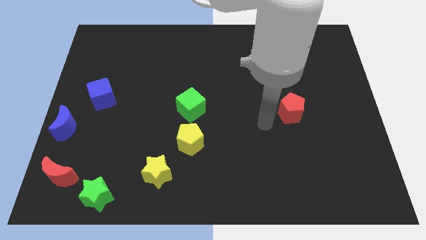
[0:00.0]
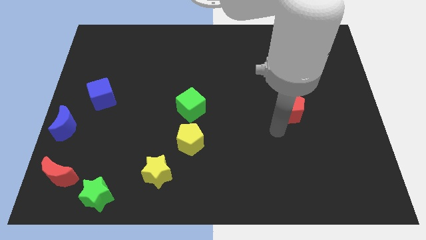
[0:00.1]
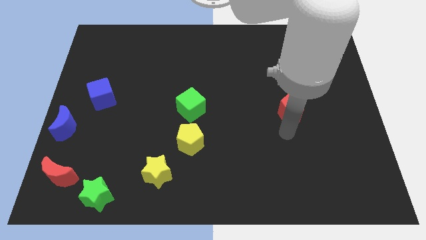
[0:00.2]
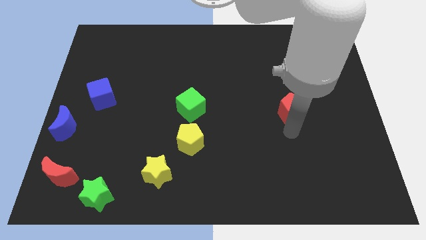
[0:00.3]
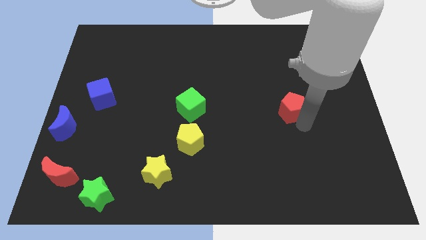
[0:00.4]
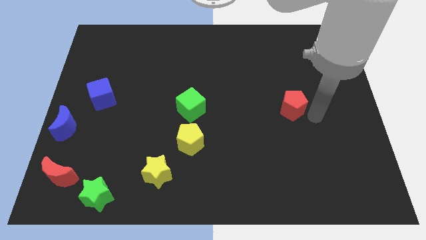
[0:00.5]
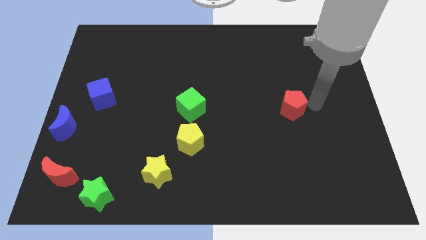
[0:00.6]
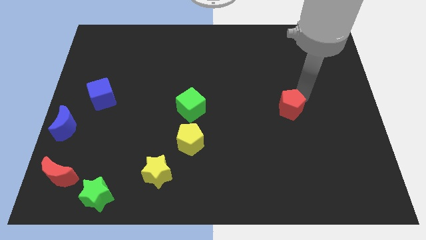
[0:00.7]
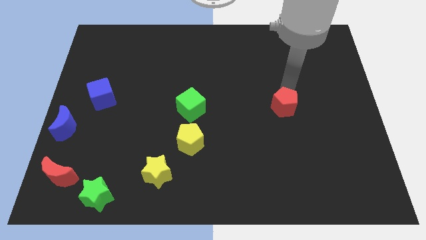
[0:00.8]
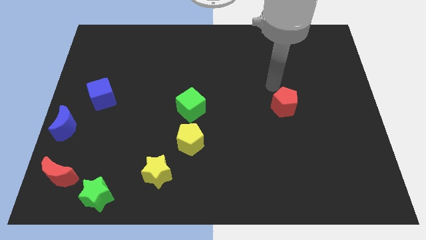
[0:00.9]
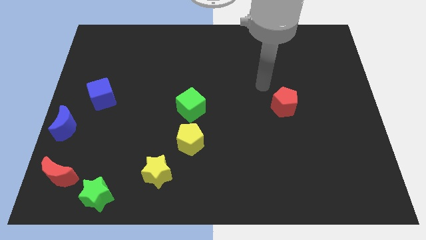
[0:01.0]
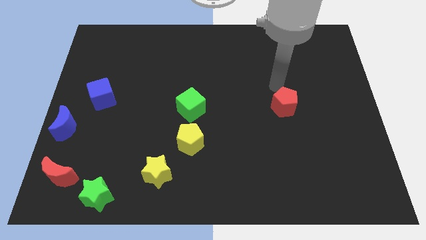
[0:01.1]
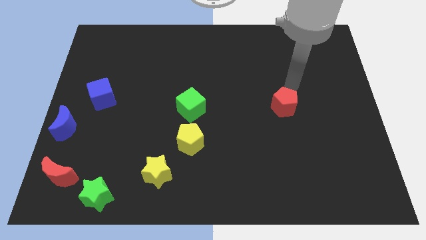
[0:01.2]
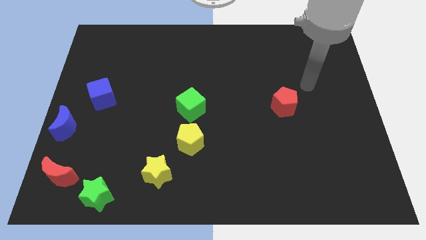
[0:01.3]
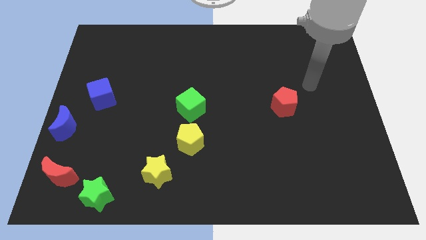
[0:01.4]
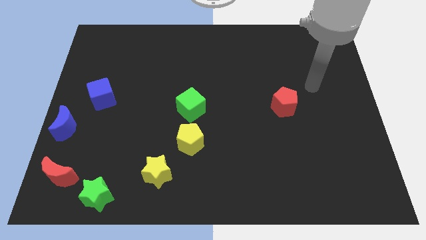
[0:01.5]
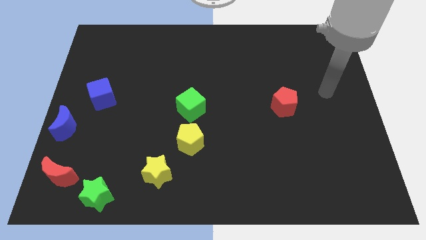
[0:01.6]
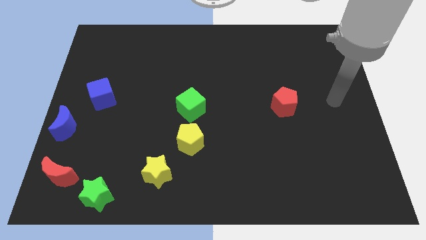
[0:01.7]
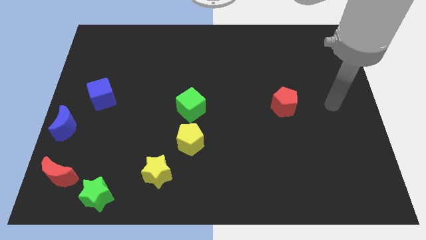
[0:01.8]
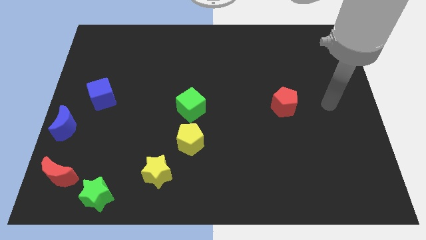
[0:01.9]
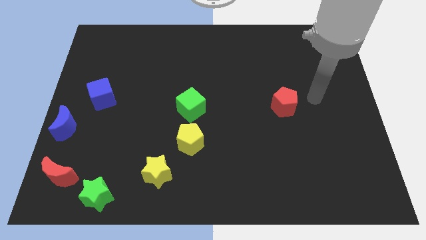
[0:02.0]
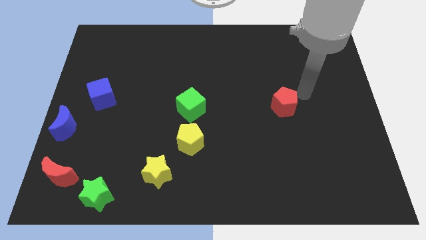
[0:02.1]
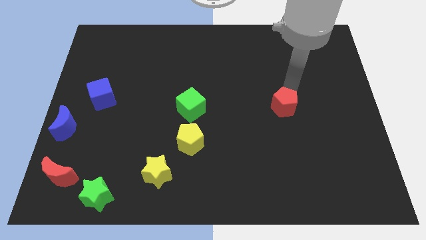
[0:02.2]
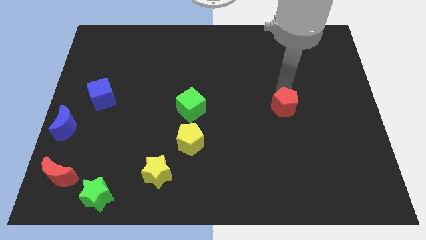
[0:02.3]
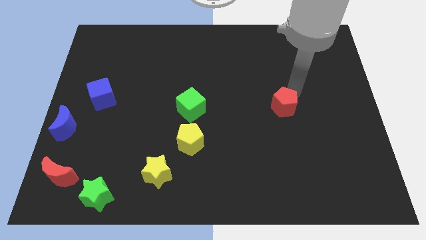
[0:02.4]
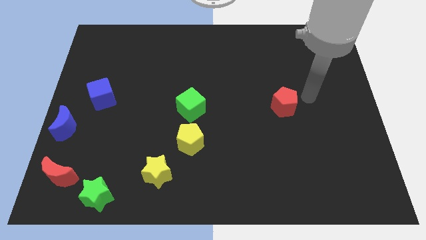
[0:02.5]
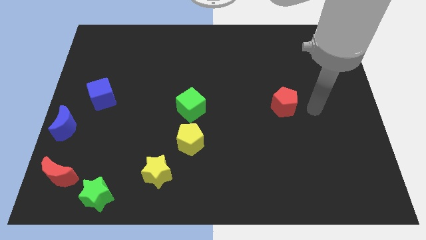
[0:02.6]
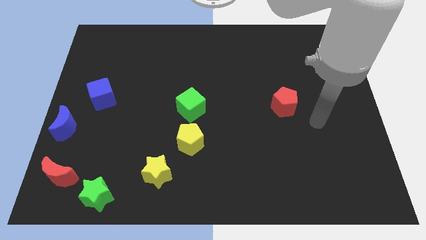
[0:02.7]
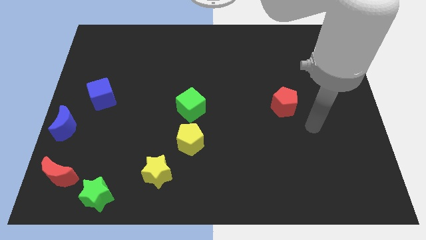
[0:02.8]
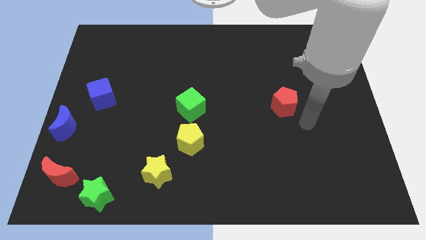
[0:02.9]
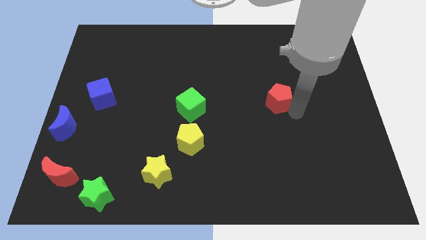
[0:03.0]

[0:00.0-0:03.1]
slightly move the red pentagon parallel to the right side of the green cube

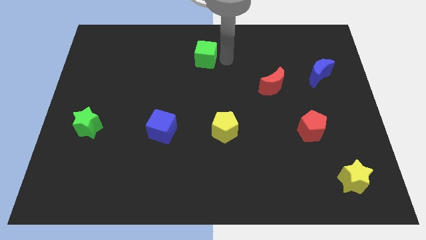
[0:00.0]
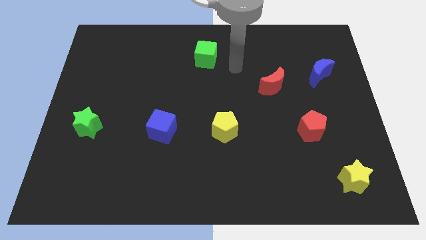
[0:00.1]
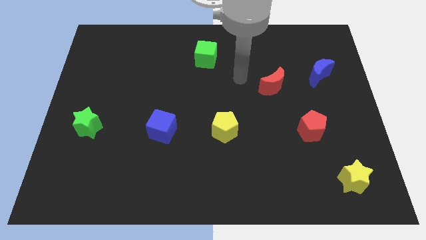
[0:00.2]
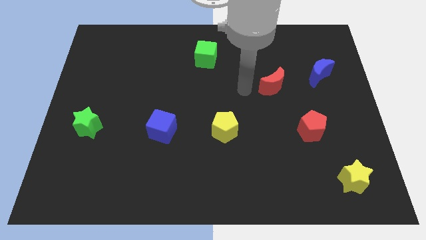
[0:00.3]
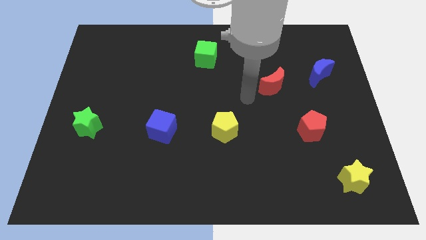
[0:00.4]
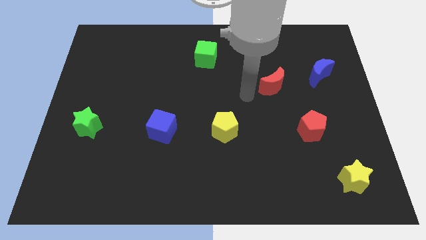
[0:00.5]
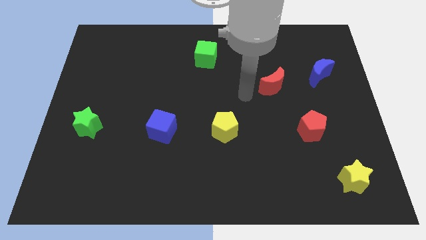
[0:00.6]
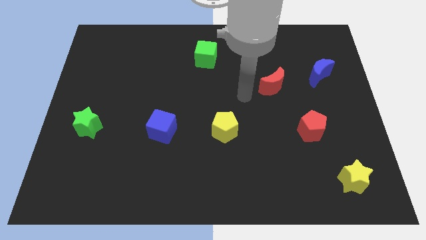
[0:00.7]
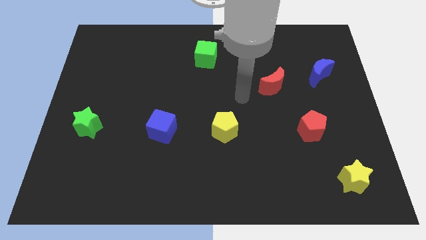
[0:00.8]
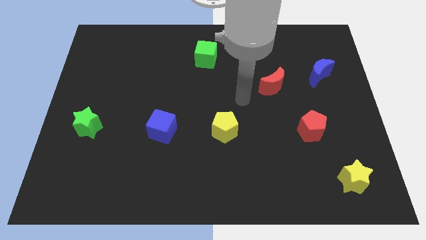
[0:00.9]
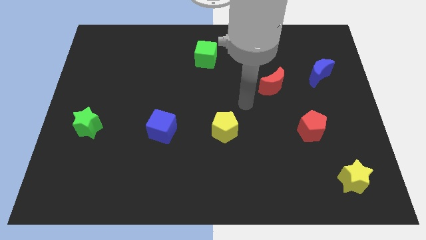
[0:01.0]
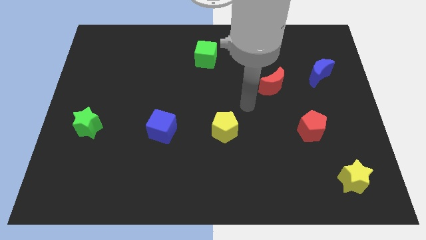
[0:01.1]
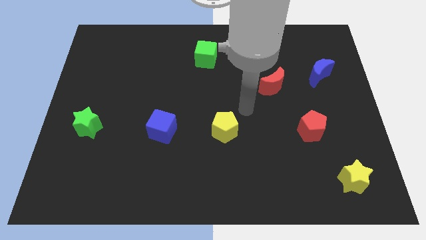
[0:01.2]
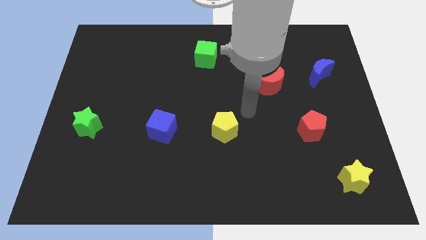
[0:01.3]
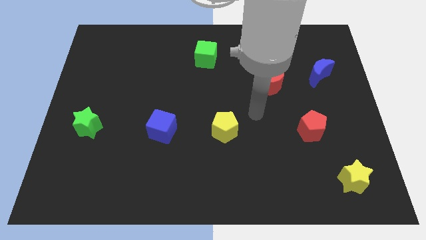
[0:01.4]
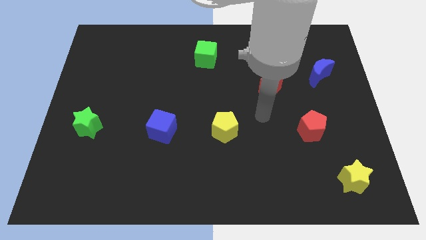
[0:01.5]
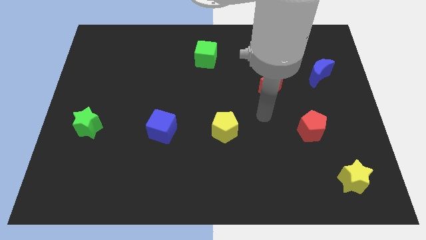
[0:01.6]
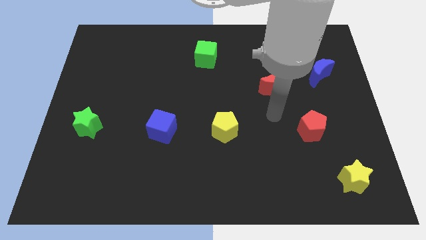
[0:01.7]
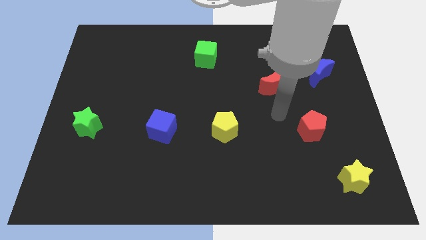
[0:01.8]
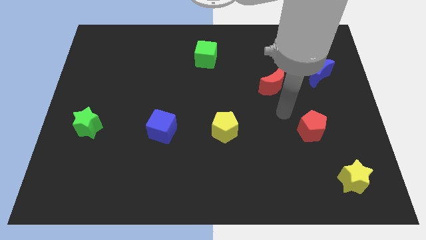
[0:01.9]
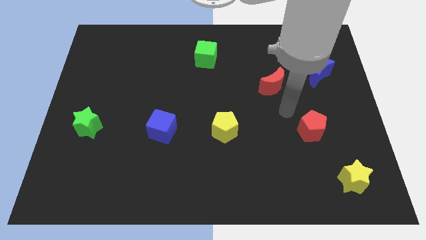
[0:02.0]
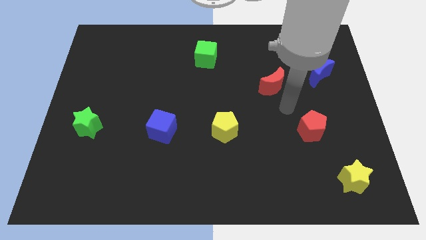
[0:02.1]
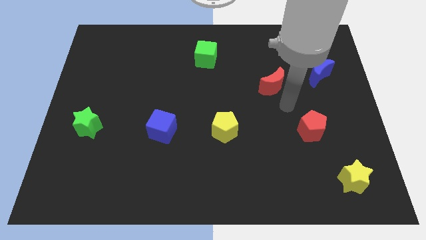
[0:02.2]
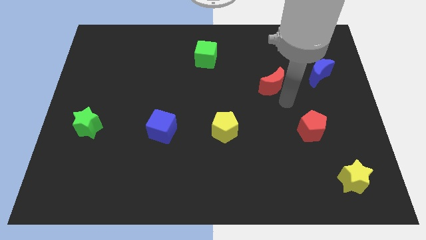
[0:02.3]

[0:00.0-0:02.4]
move your arm away from the green cube

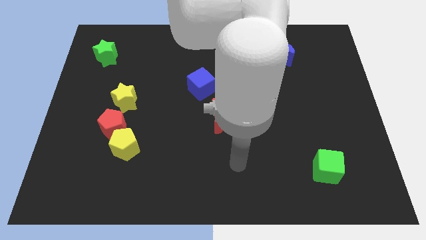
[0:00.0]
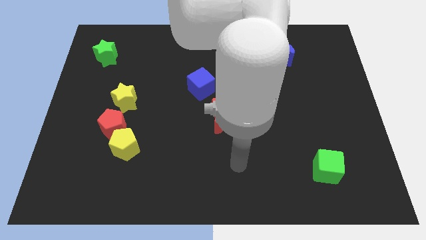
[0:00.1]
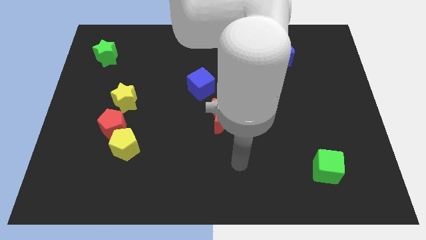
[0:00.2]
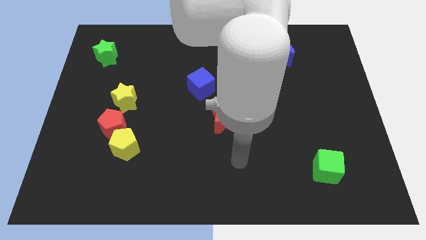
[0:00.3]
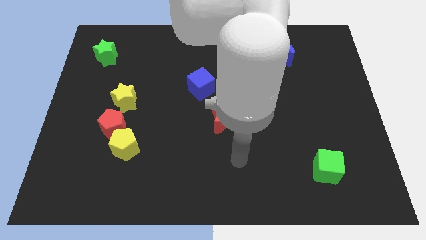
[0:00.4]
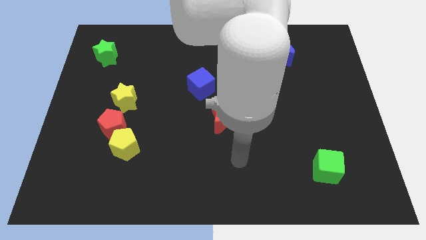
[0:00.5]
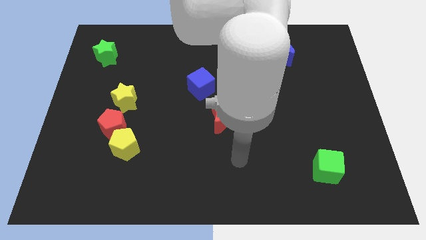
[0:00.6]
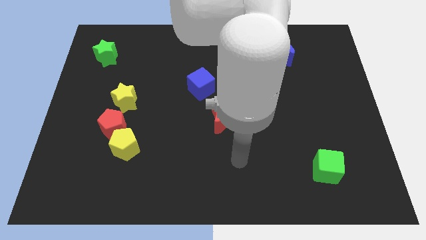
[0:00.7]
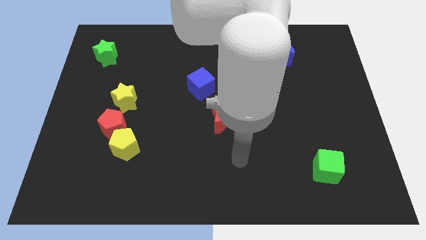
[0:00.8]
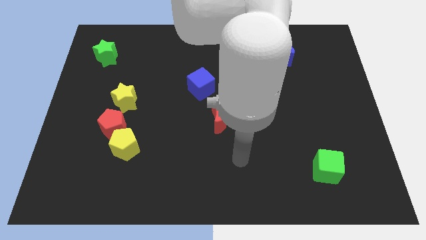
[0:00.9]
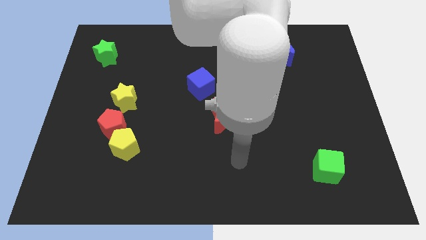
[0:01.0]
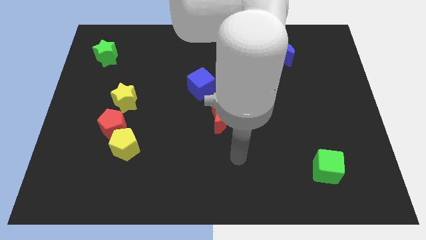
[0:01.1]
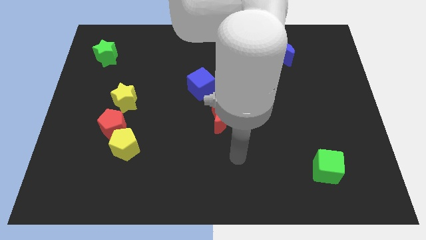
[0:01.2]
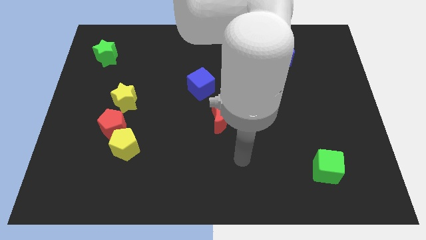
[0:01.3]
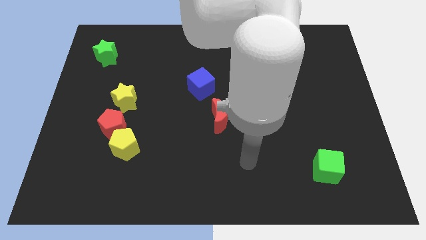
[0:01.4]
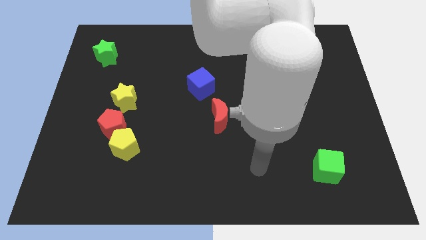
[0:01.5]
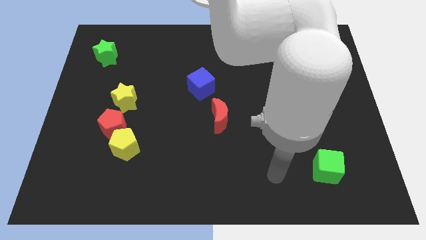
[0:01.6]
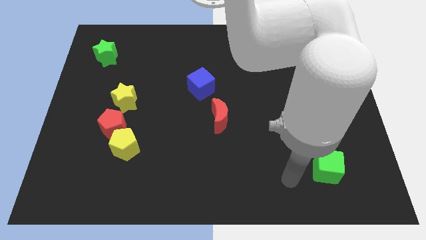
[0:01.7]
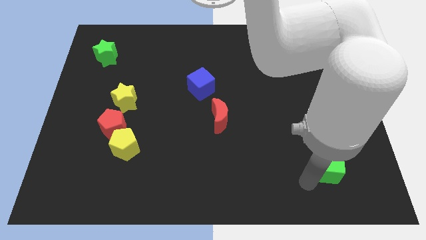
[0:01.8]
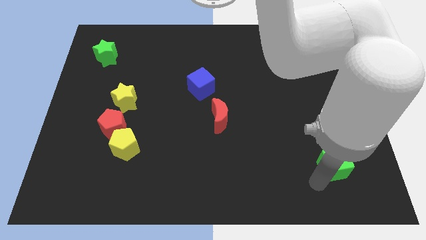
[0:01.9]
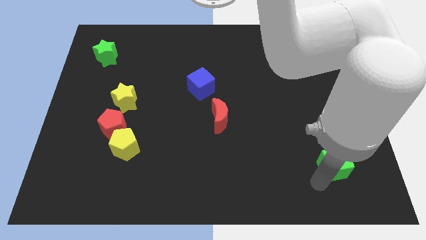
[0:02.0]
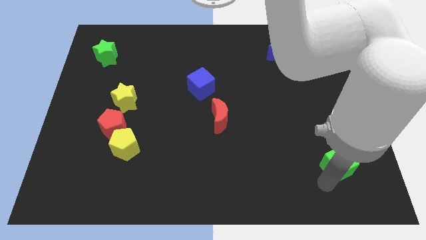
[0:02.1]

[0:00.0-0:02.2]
move your arm close to the green cube

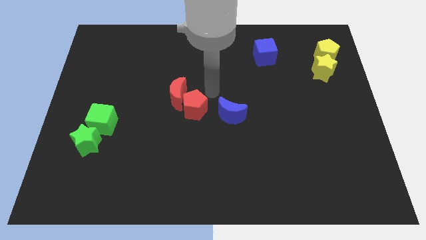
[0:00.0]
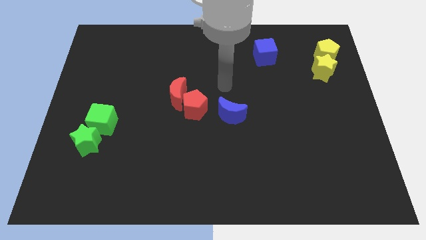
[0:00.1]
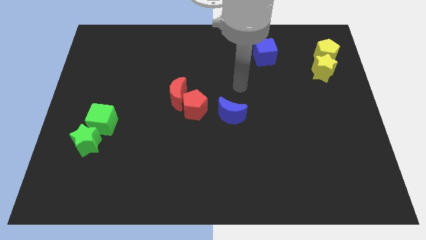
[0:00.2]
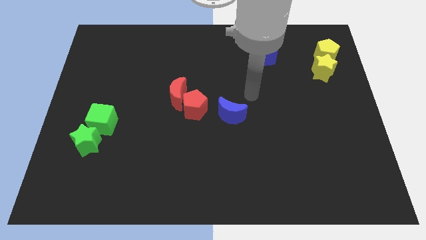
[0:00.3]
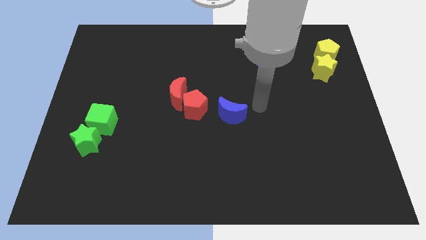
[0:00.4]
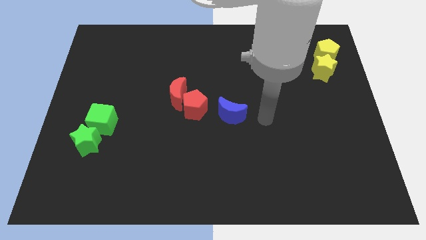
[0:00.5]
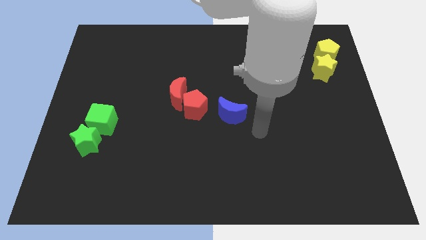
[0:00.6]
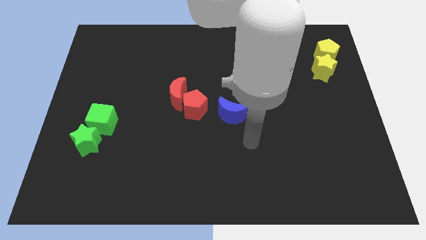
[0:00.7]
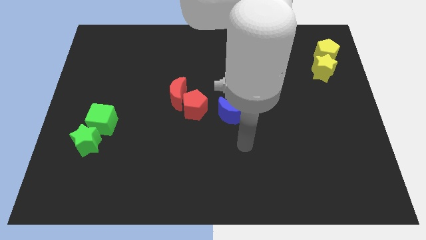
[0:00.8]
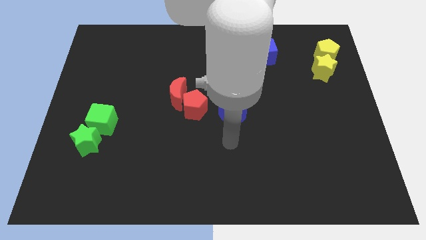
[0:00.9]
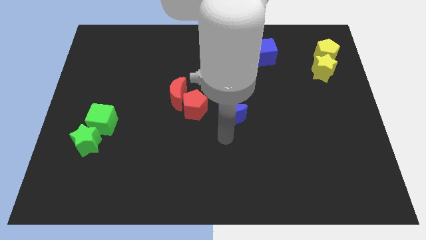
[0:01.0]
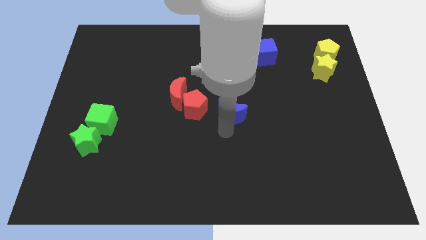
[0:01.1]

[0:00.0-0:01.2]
slide the pointer to the bottom of the blue moon

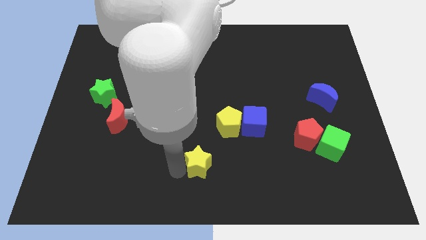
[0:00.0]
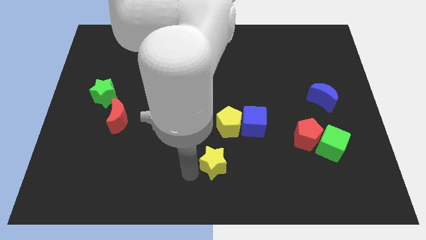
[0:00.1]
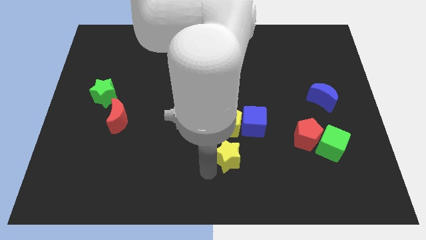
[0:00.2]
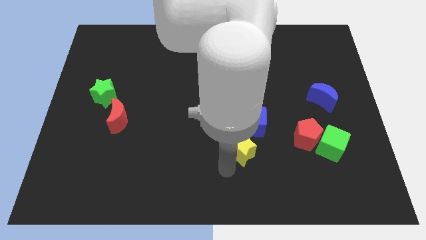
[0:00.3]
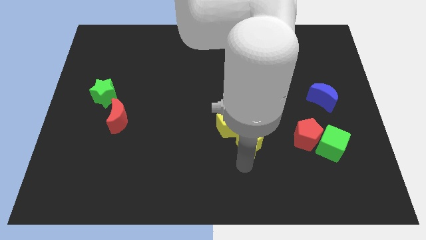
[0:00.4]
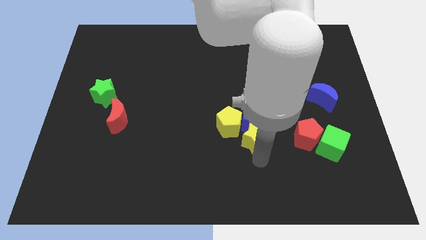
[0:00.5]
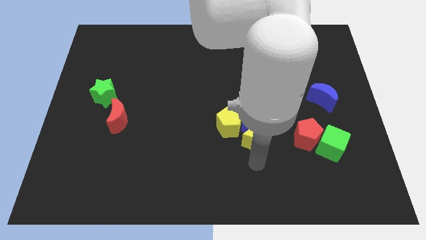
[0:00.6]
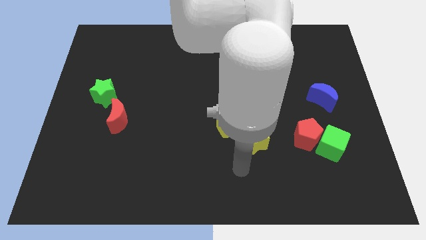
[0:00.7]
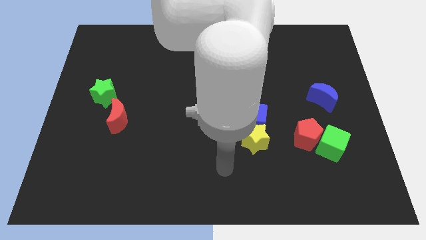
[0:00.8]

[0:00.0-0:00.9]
place the yellow star below the blue cube
